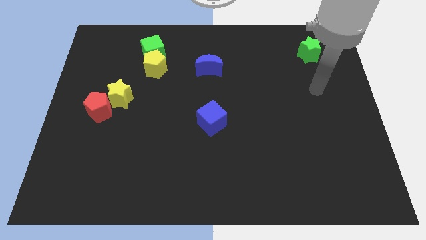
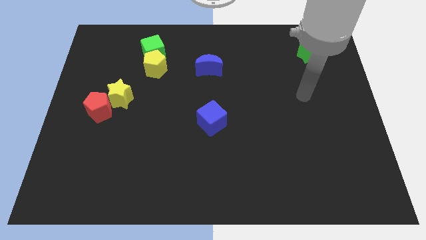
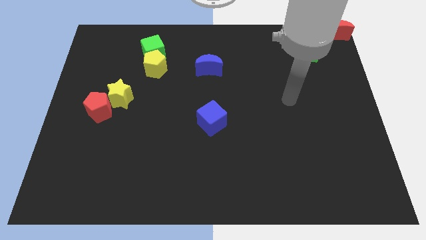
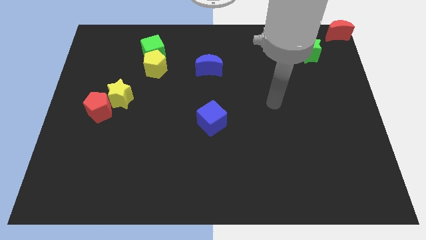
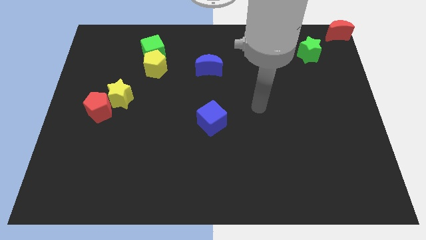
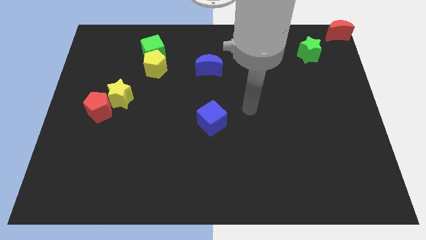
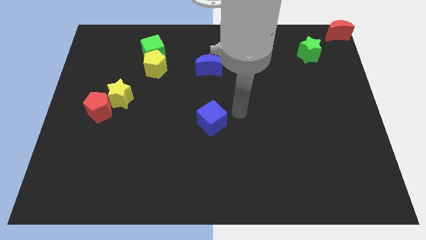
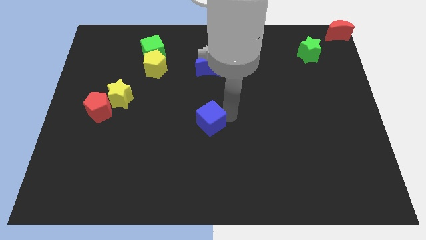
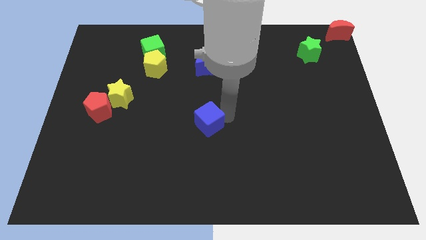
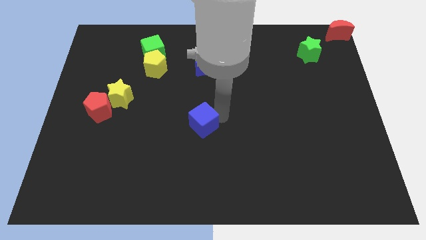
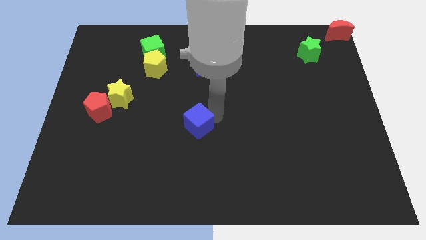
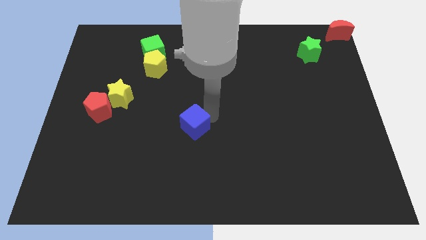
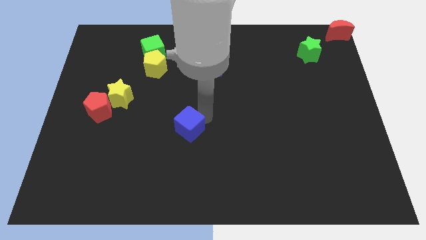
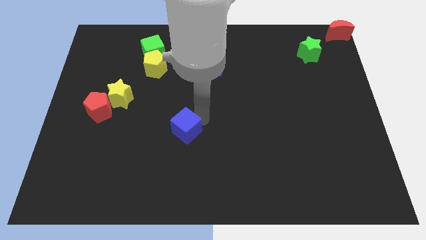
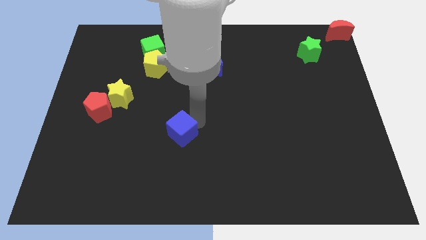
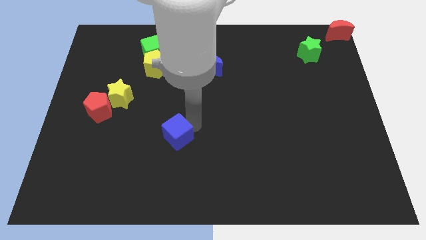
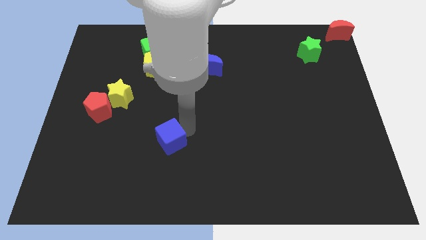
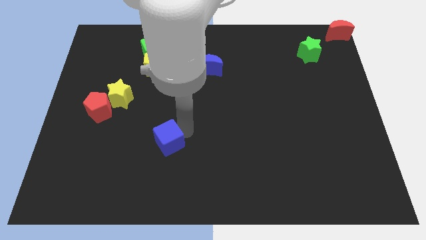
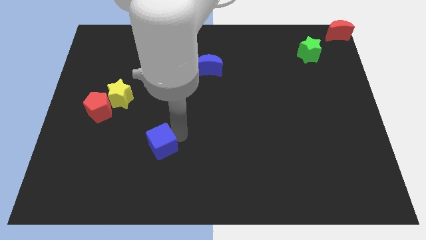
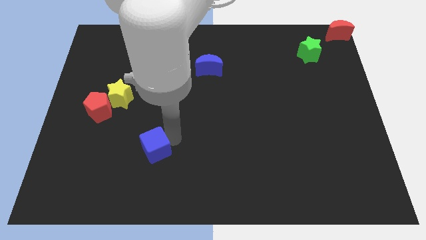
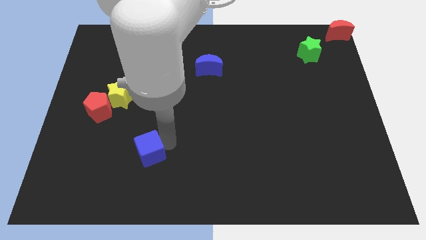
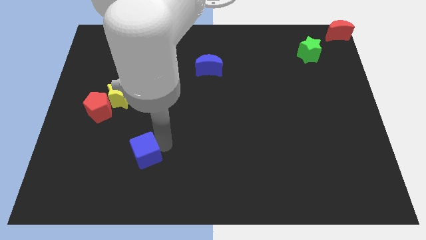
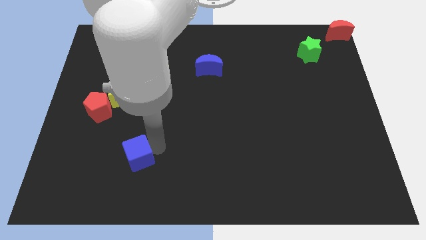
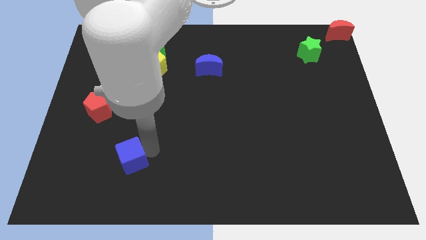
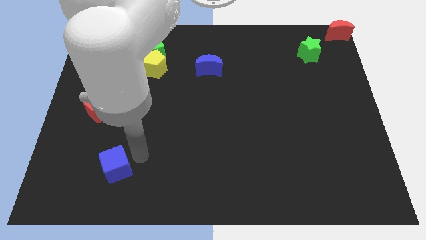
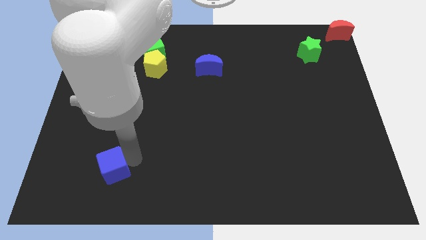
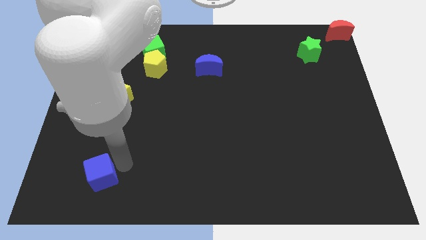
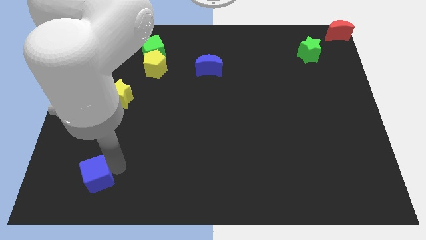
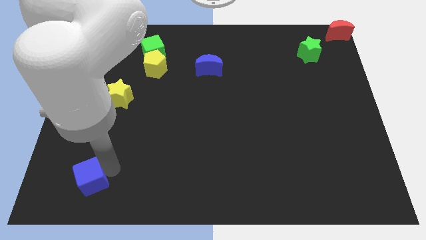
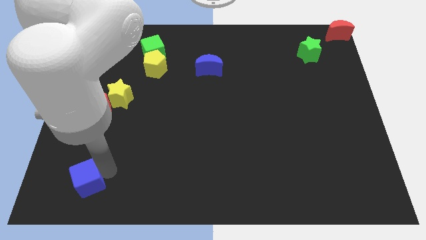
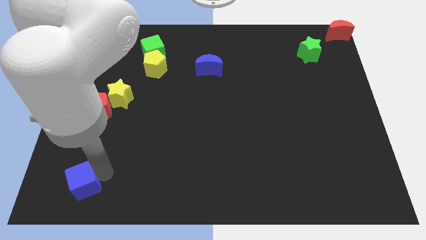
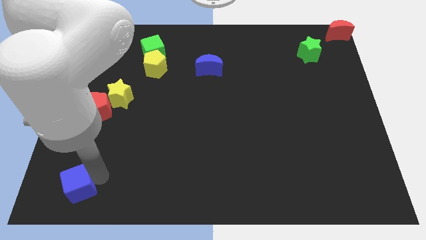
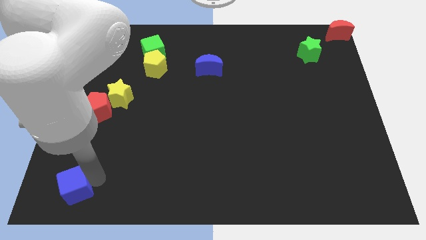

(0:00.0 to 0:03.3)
move the blue cube below red pentagon

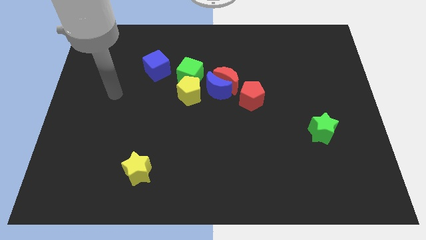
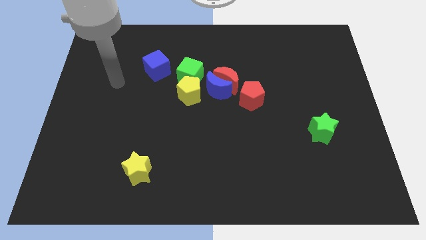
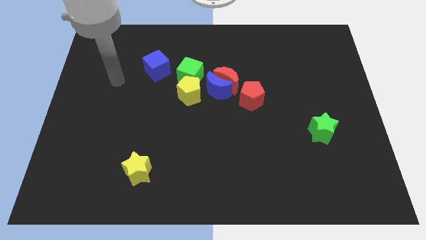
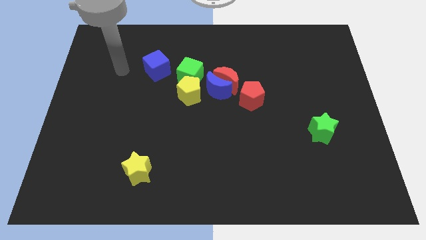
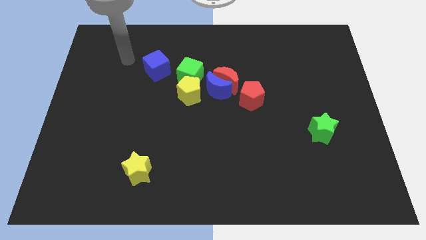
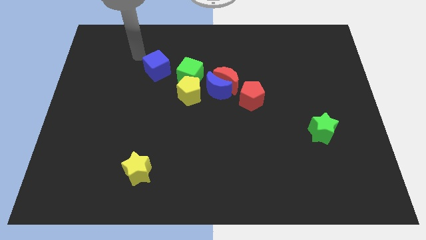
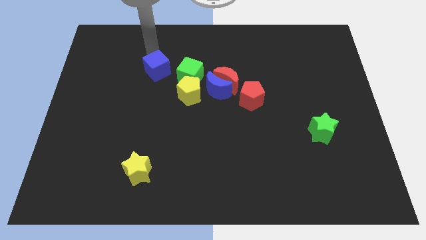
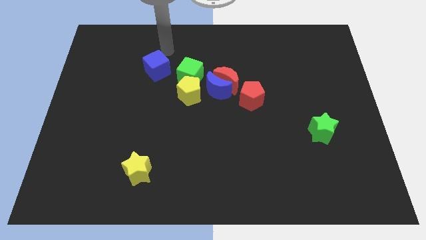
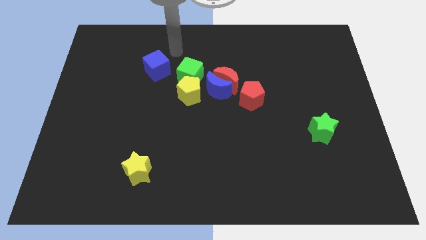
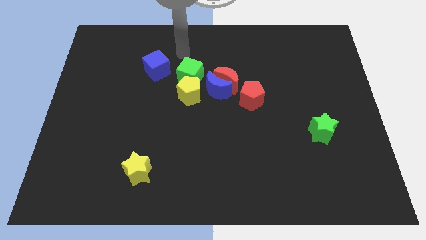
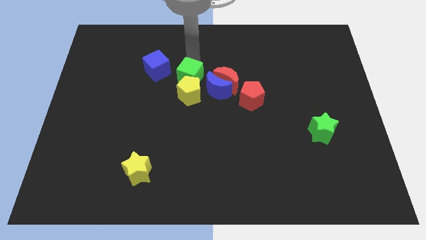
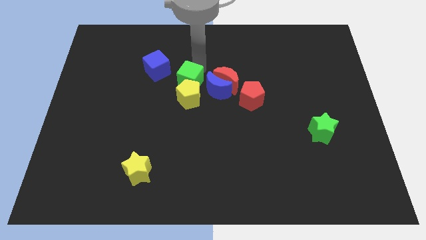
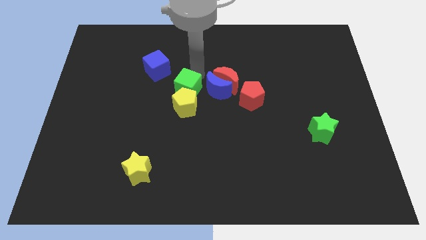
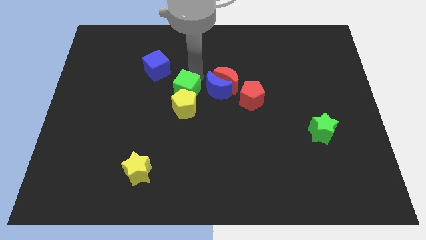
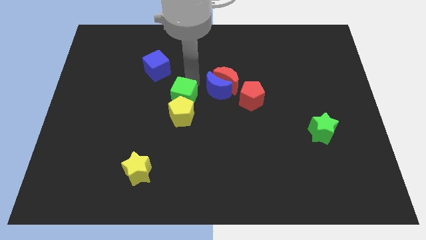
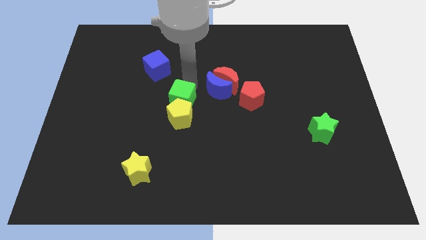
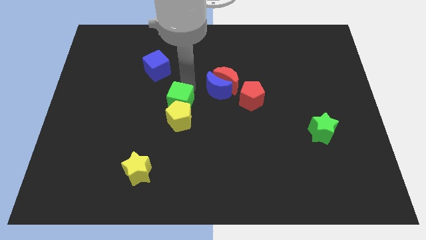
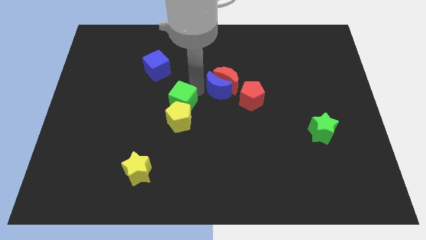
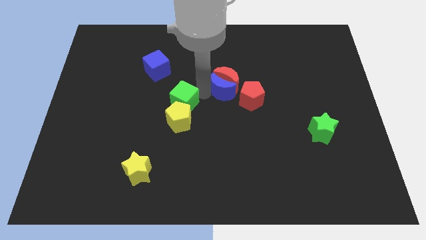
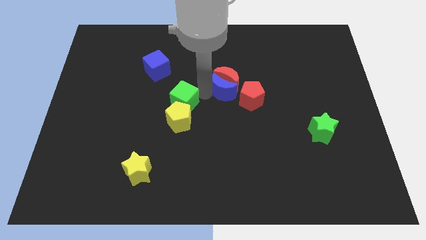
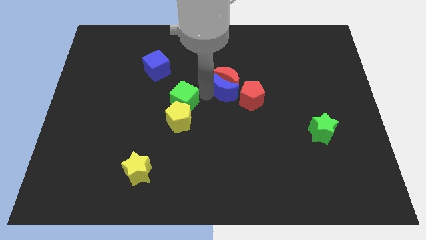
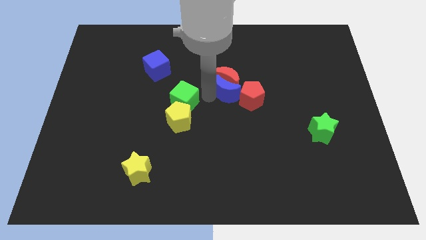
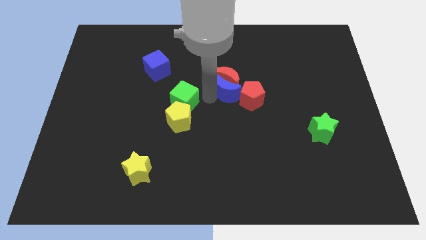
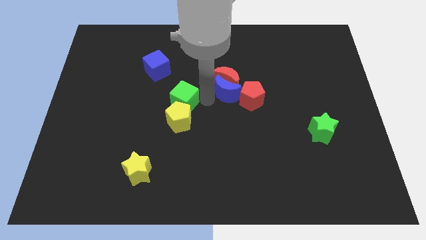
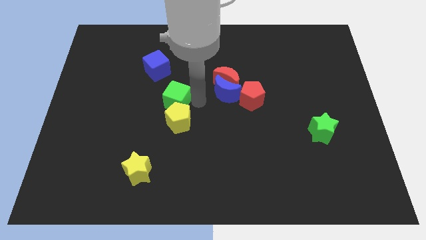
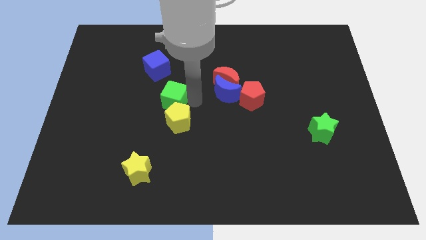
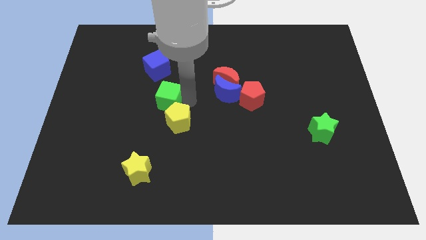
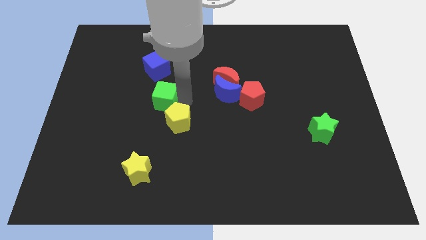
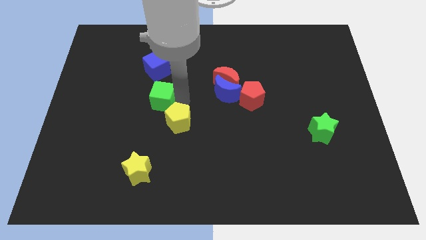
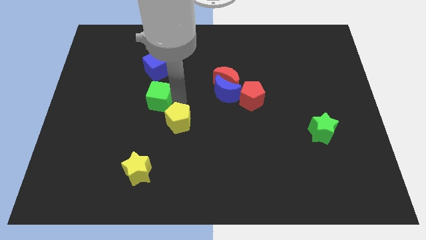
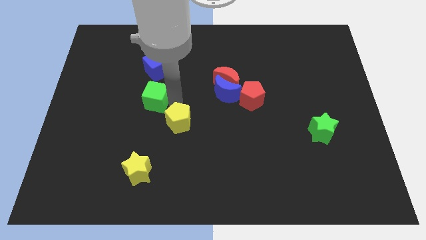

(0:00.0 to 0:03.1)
move the green cube and the yellow pentagon down slightly

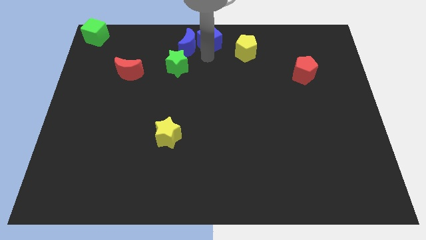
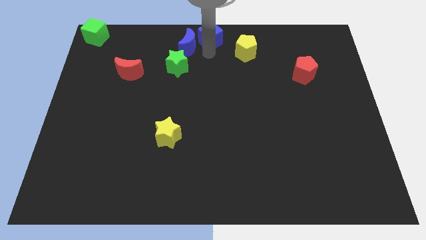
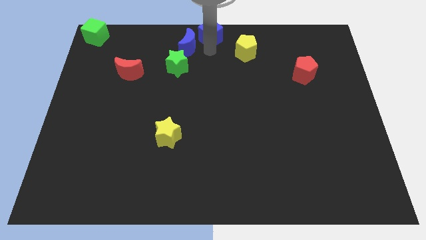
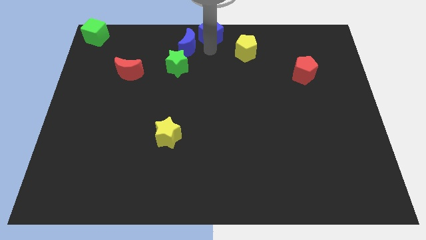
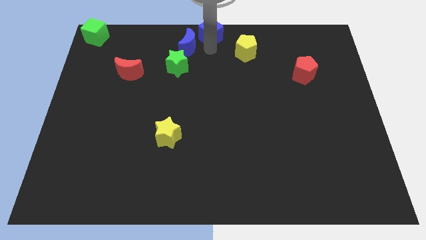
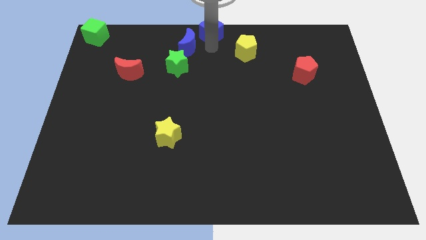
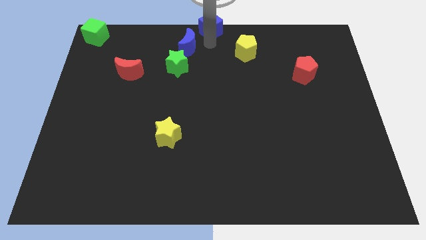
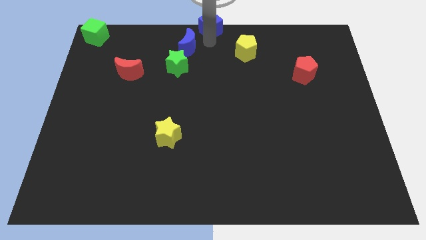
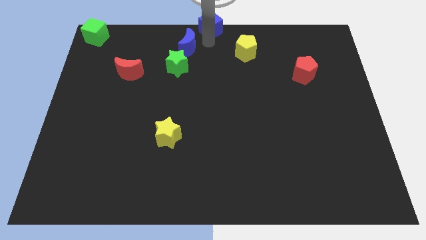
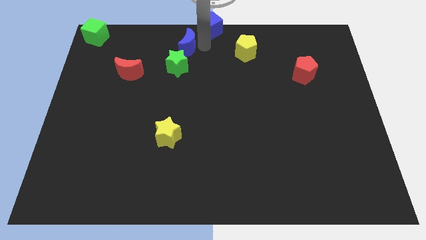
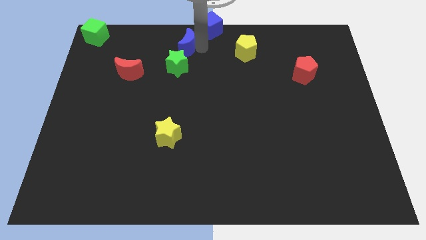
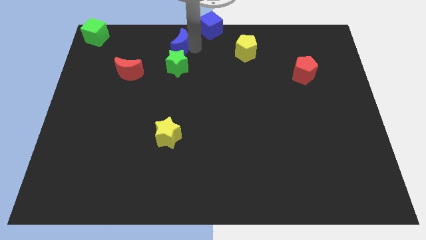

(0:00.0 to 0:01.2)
move blue cube to the top center

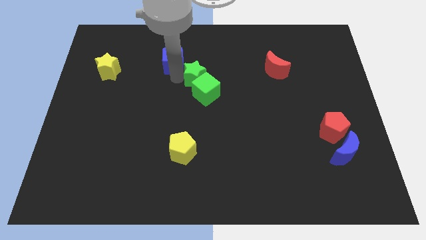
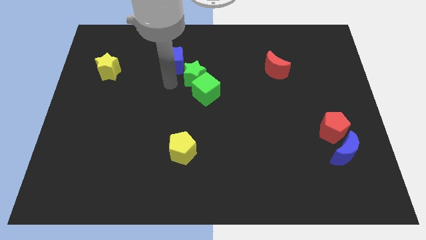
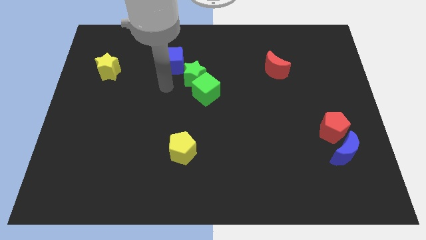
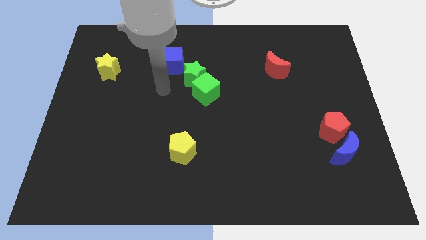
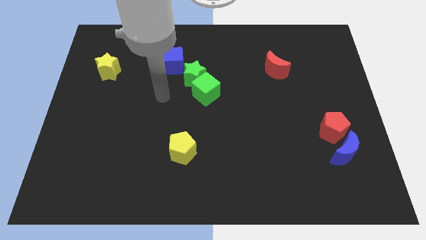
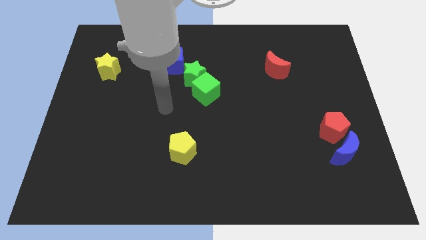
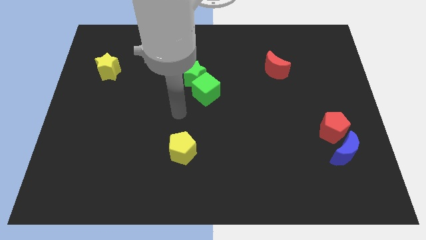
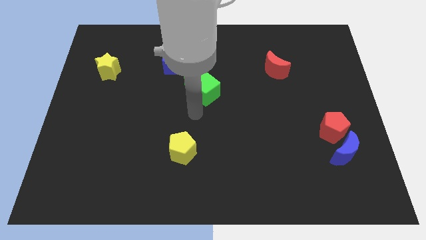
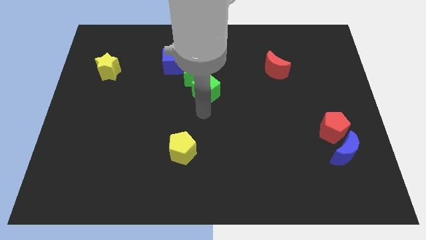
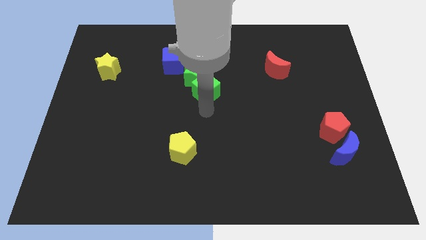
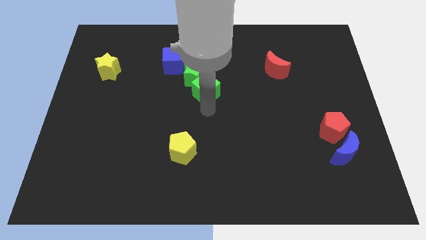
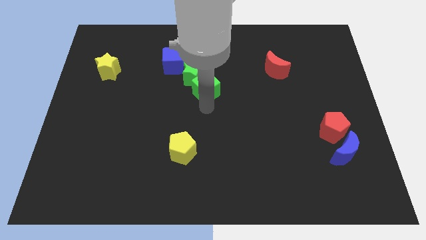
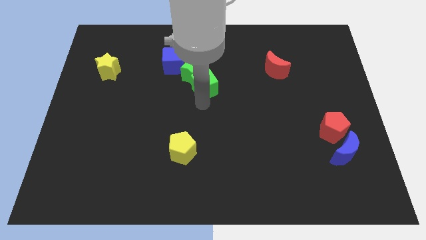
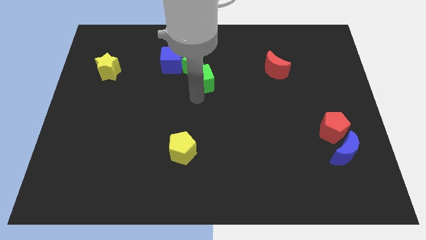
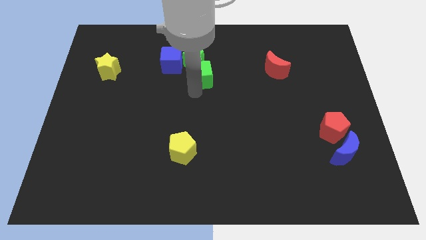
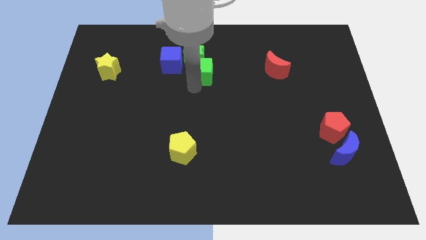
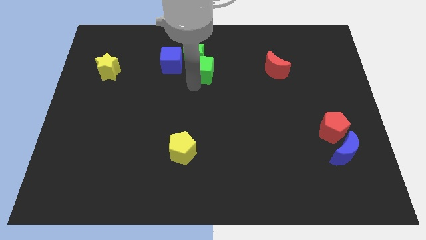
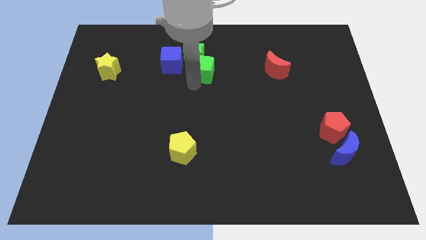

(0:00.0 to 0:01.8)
put the green blocks on the right side of the blue cube
